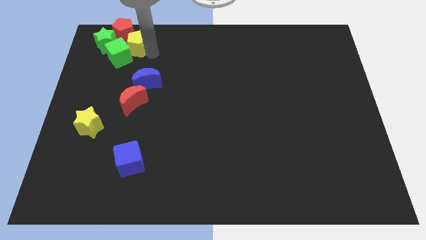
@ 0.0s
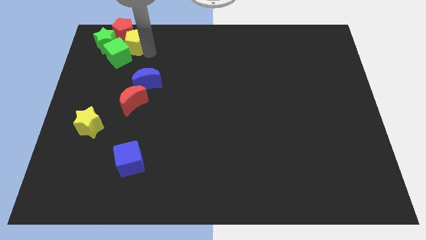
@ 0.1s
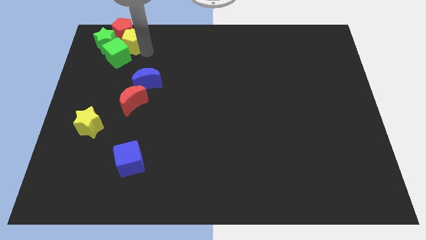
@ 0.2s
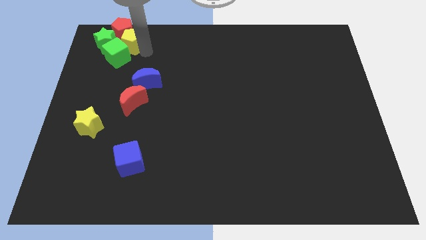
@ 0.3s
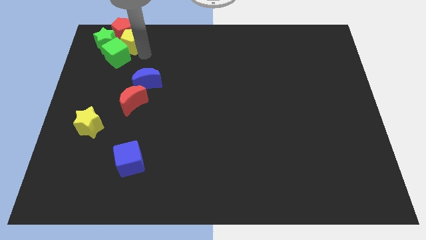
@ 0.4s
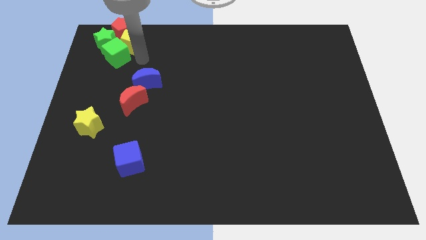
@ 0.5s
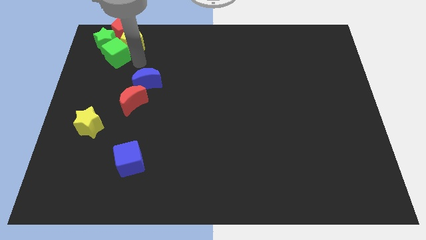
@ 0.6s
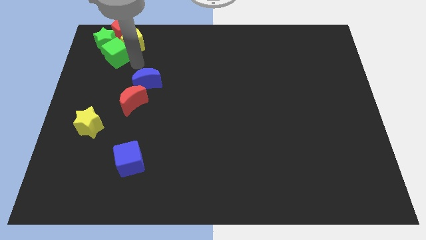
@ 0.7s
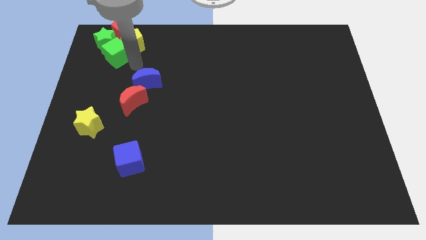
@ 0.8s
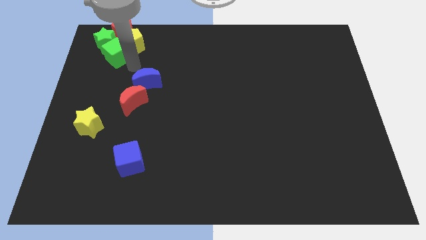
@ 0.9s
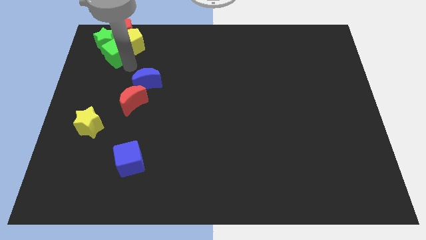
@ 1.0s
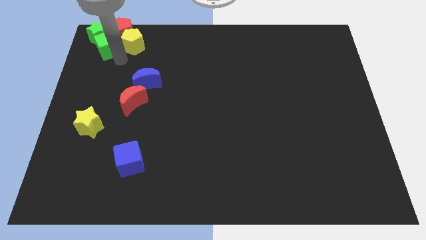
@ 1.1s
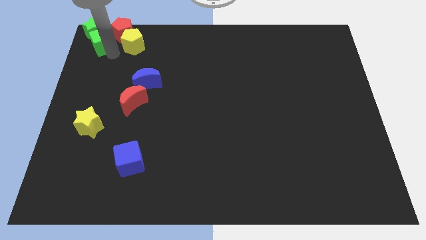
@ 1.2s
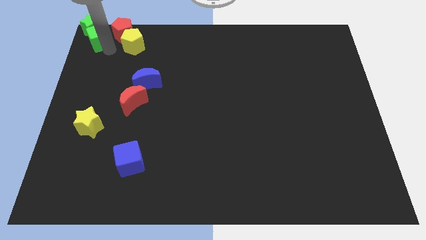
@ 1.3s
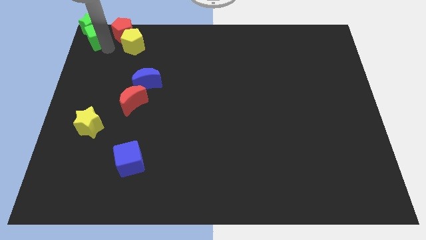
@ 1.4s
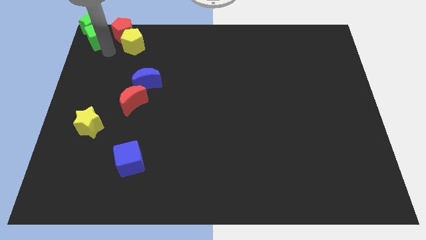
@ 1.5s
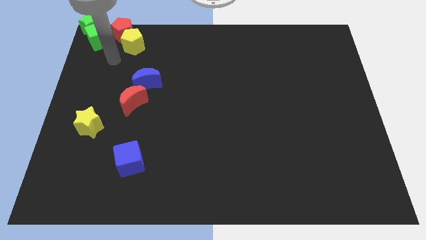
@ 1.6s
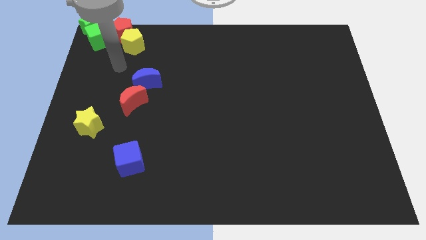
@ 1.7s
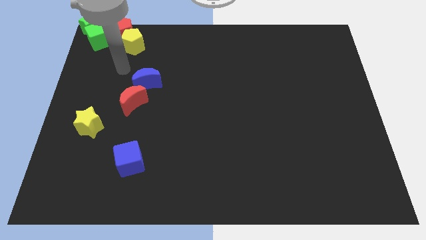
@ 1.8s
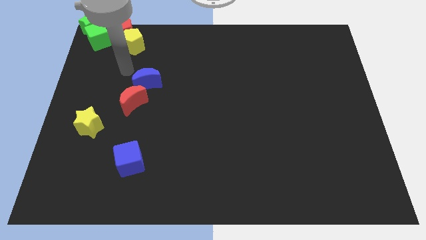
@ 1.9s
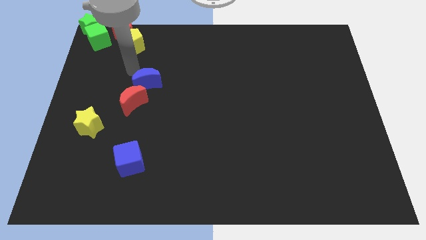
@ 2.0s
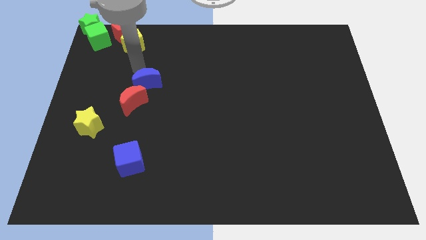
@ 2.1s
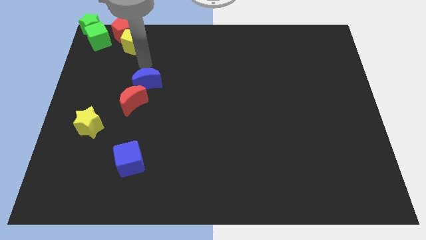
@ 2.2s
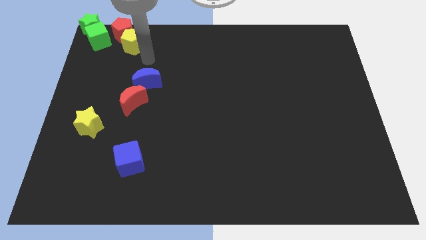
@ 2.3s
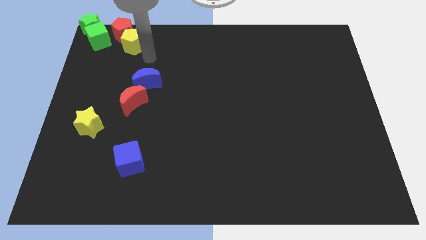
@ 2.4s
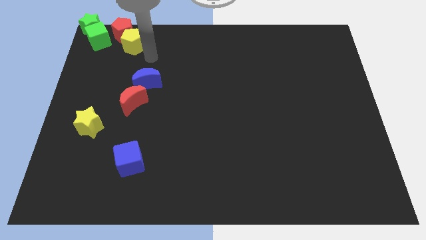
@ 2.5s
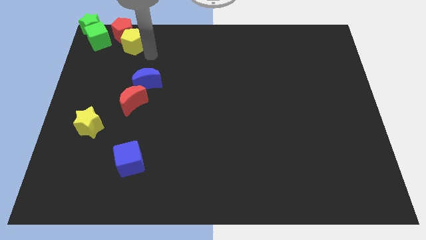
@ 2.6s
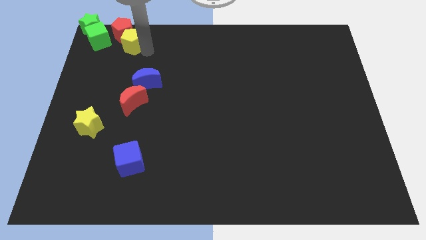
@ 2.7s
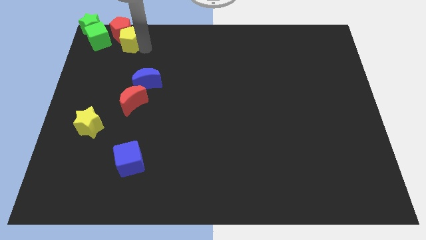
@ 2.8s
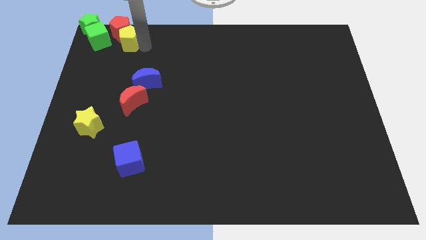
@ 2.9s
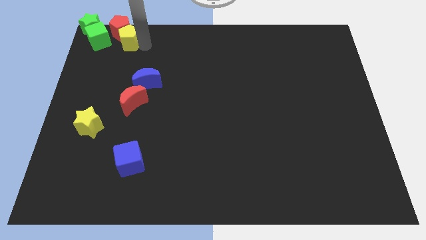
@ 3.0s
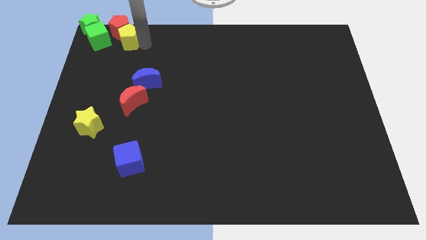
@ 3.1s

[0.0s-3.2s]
put the green blocks at the top left corner

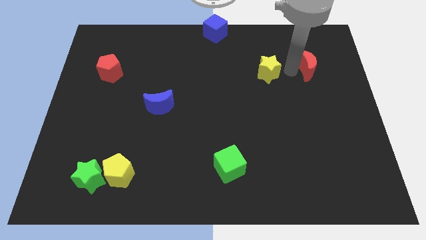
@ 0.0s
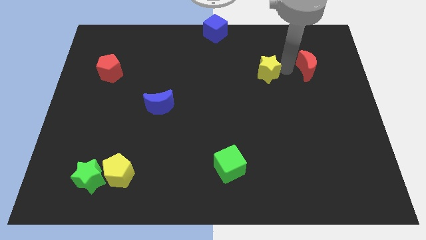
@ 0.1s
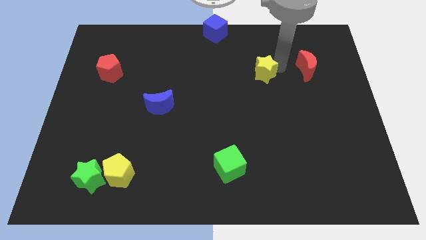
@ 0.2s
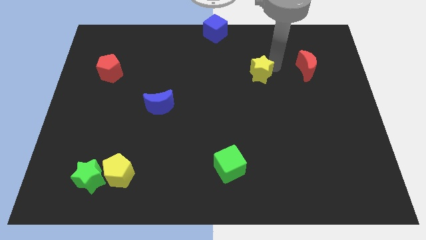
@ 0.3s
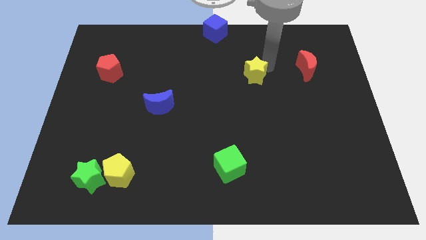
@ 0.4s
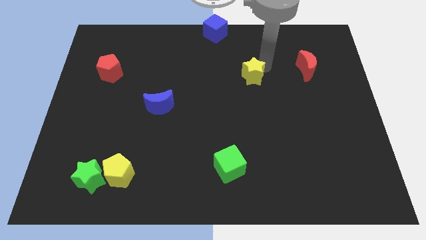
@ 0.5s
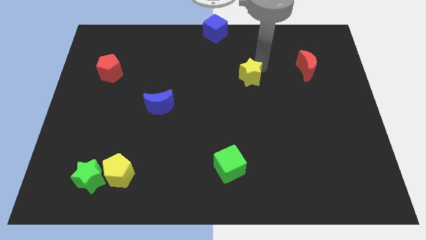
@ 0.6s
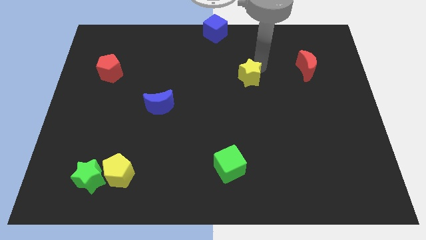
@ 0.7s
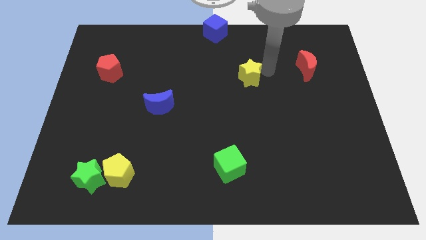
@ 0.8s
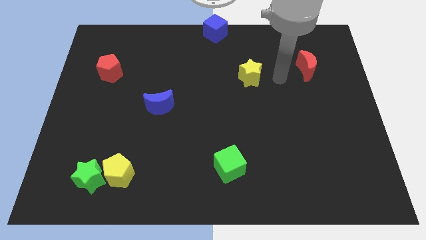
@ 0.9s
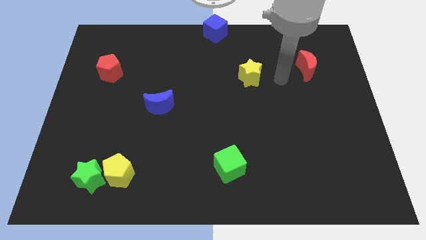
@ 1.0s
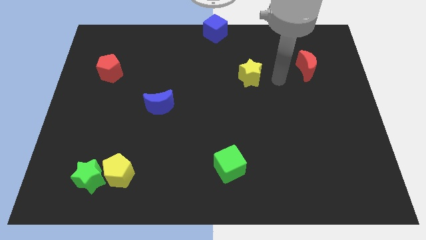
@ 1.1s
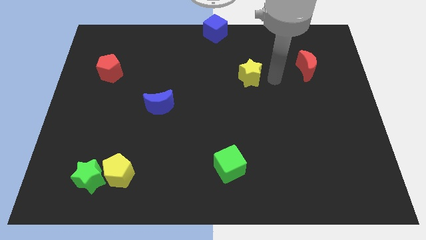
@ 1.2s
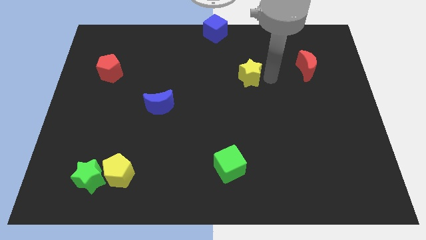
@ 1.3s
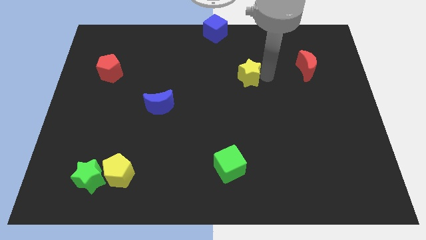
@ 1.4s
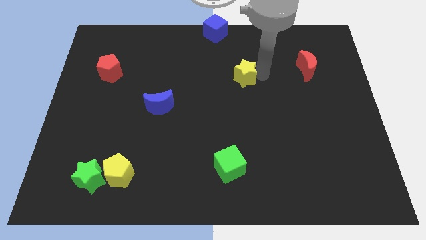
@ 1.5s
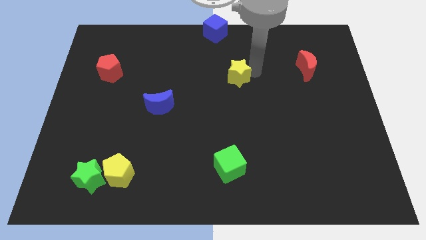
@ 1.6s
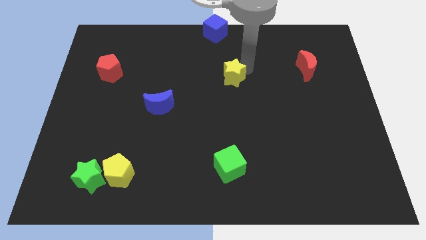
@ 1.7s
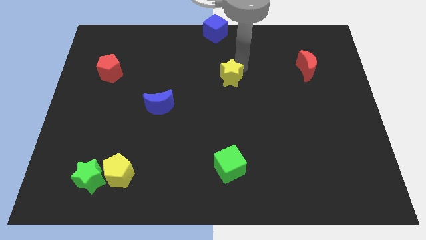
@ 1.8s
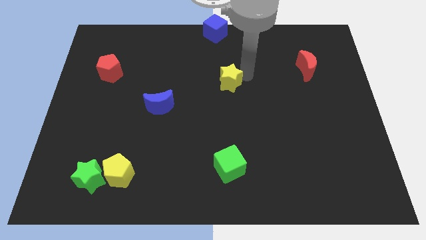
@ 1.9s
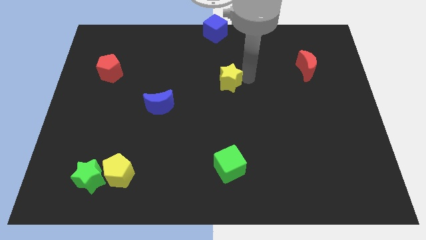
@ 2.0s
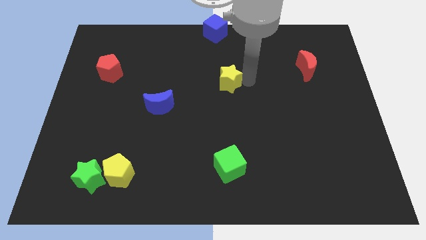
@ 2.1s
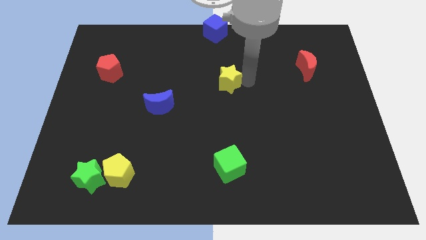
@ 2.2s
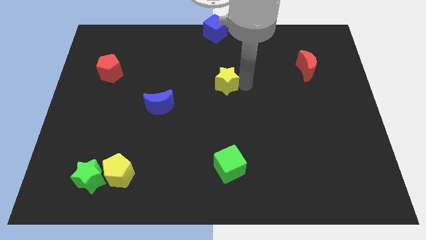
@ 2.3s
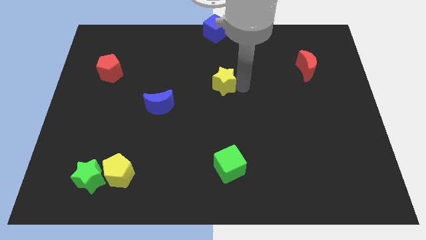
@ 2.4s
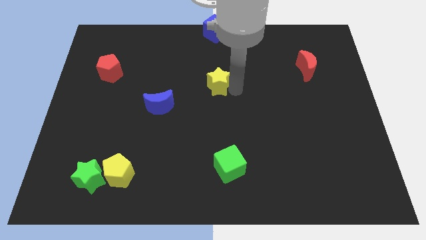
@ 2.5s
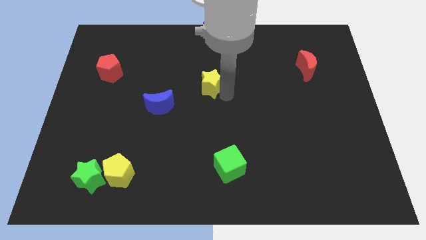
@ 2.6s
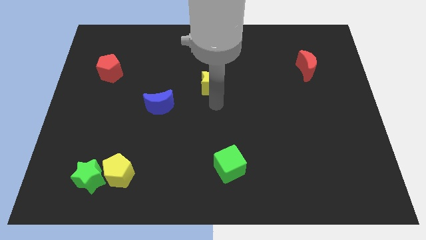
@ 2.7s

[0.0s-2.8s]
push the yellow star to the bottom of the blue cube

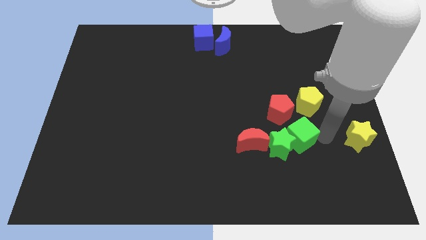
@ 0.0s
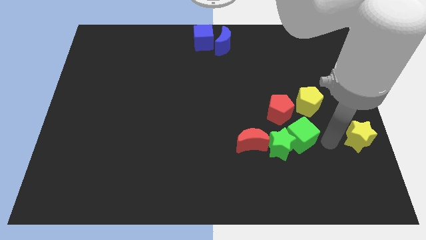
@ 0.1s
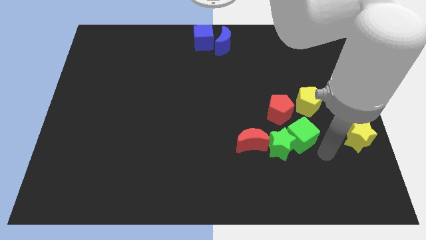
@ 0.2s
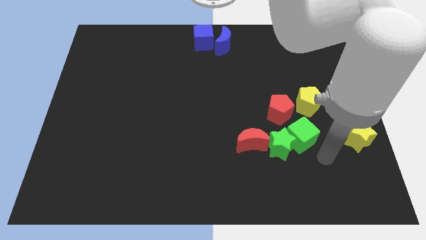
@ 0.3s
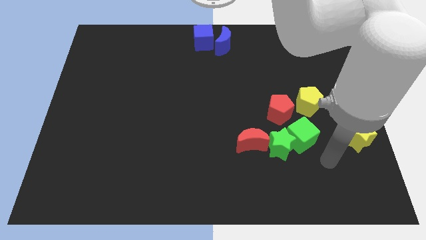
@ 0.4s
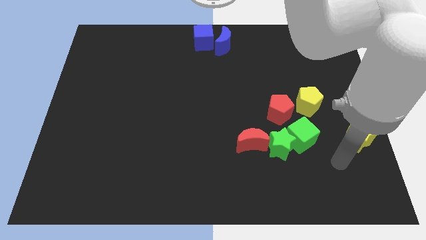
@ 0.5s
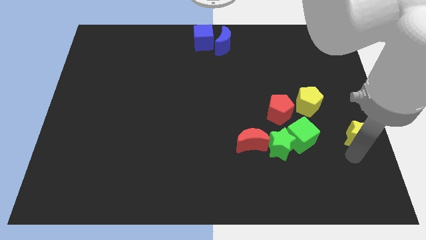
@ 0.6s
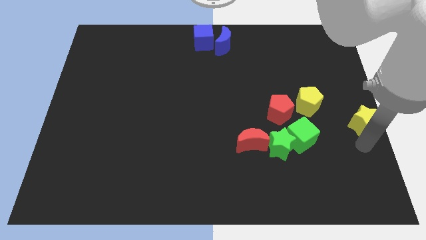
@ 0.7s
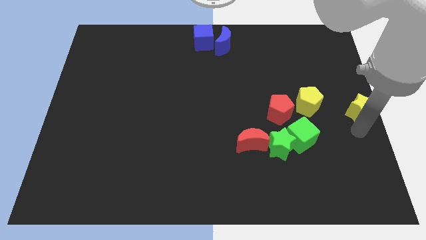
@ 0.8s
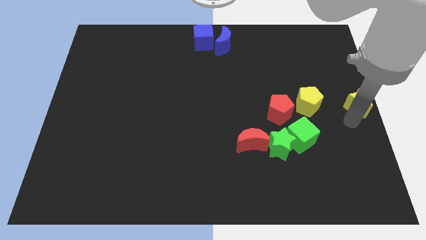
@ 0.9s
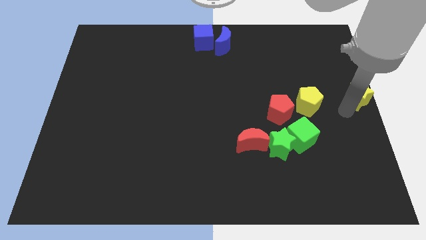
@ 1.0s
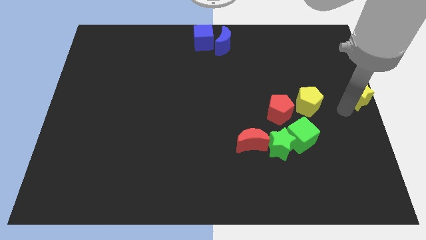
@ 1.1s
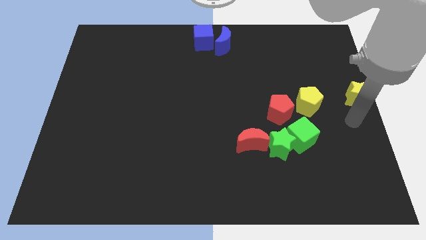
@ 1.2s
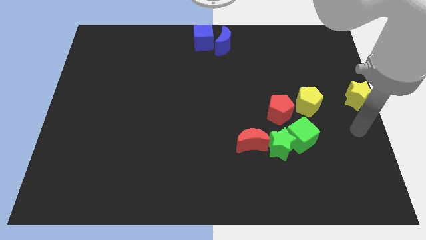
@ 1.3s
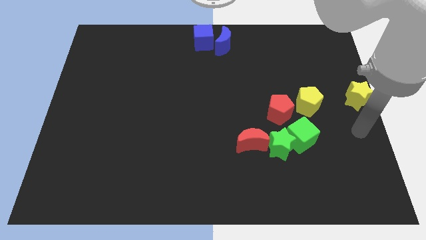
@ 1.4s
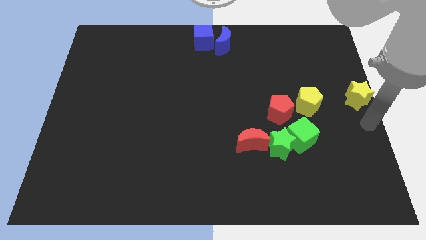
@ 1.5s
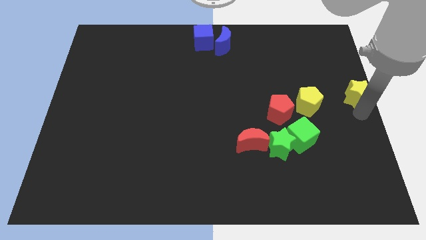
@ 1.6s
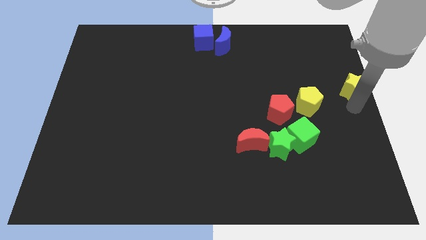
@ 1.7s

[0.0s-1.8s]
push the yellow star diagonal right of yellow pentagon

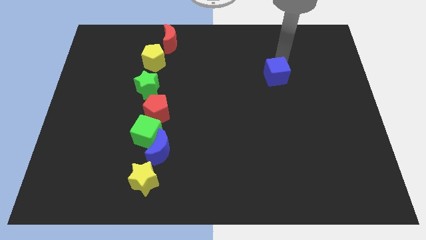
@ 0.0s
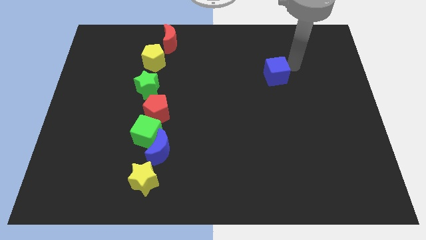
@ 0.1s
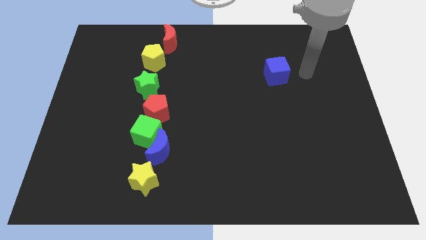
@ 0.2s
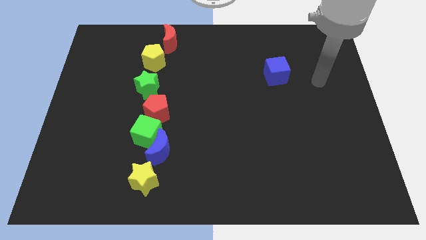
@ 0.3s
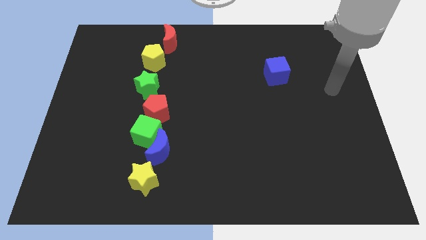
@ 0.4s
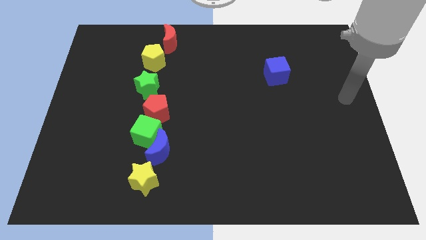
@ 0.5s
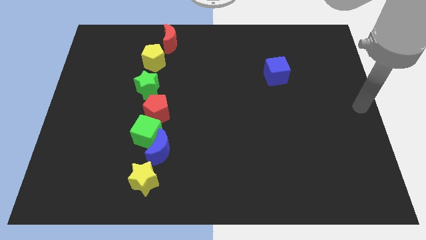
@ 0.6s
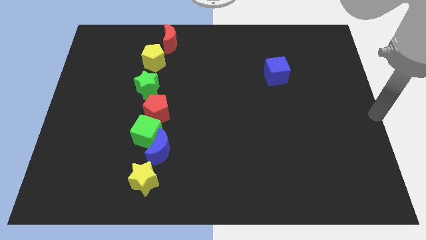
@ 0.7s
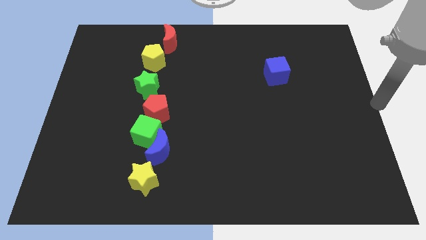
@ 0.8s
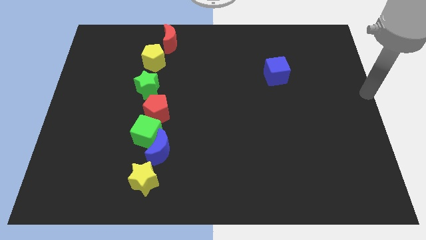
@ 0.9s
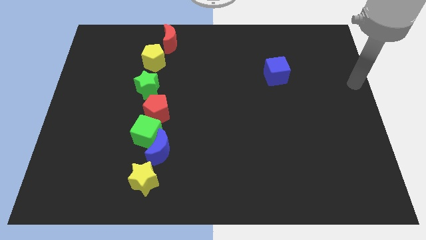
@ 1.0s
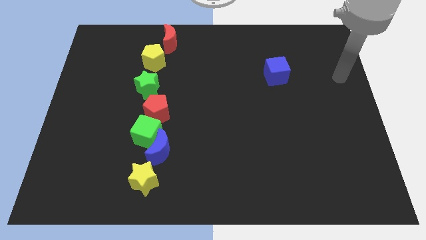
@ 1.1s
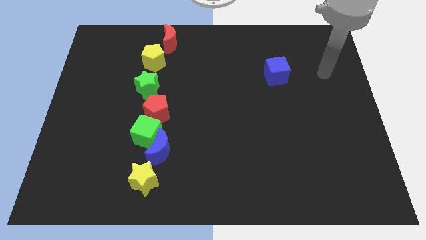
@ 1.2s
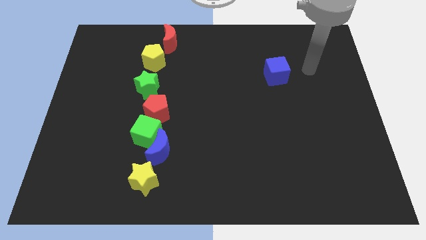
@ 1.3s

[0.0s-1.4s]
move your arm away from the blue cube
